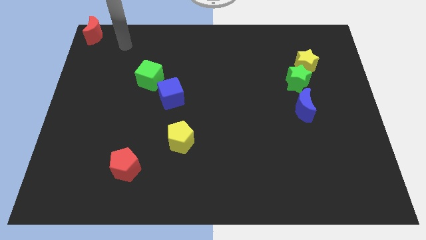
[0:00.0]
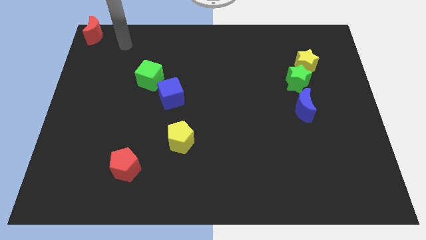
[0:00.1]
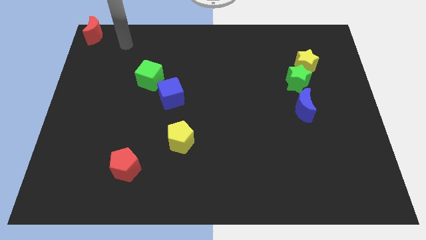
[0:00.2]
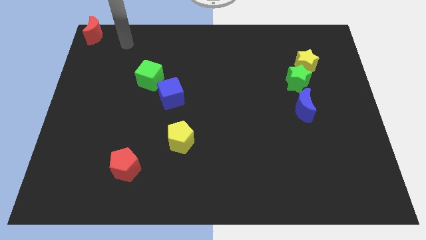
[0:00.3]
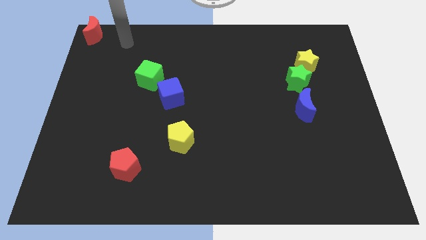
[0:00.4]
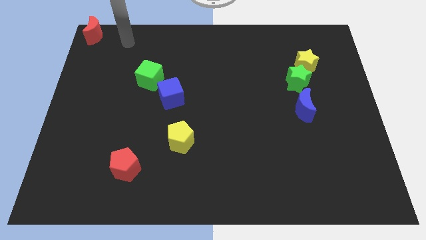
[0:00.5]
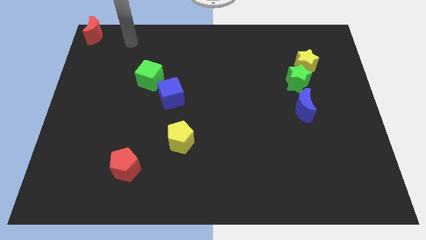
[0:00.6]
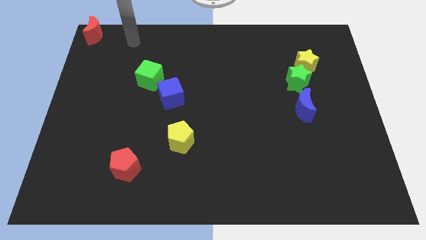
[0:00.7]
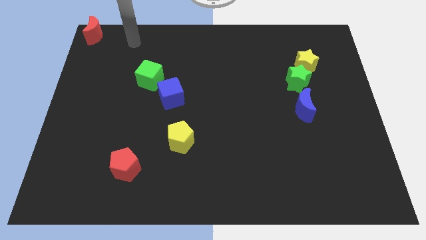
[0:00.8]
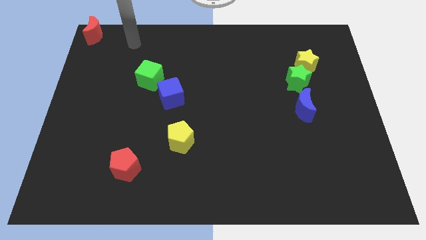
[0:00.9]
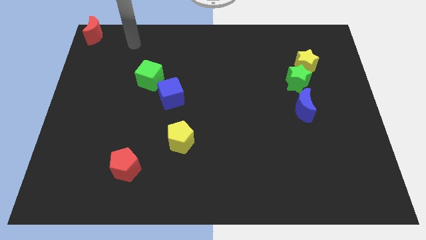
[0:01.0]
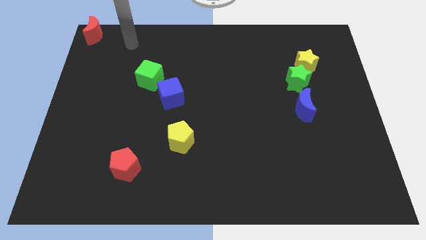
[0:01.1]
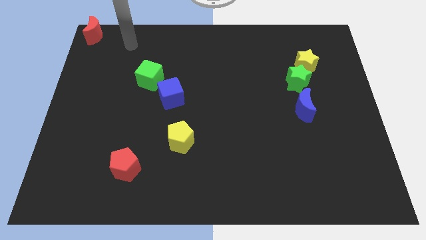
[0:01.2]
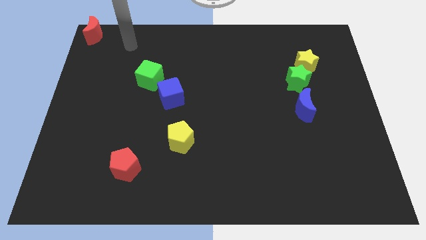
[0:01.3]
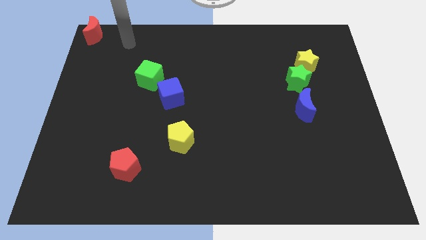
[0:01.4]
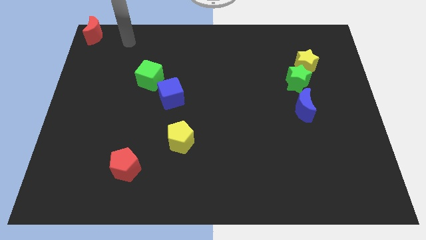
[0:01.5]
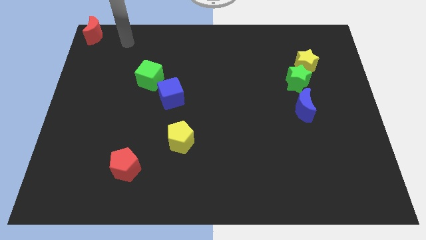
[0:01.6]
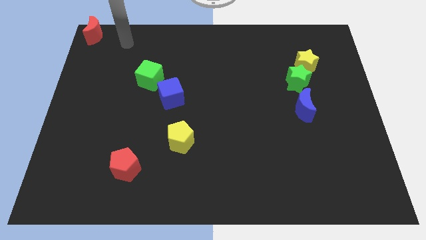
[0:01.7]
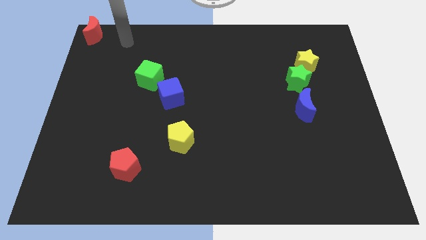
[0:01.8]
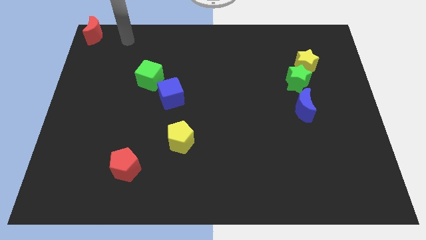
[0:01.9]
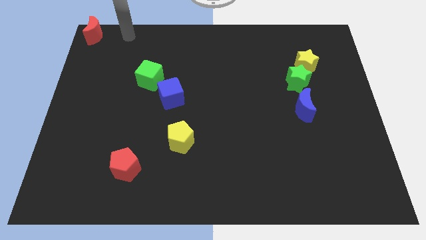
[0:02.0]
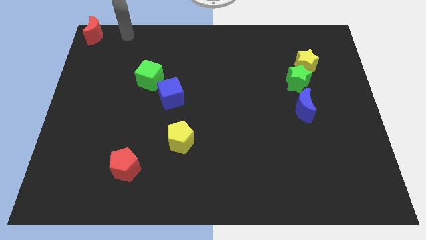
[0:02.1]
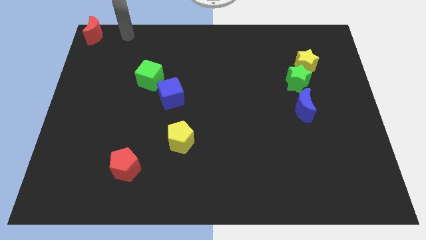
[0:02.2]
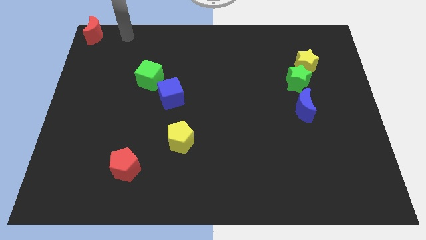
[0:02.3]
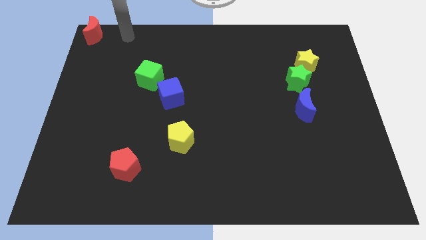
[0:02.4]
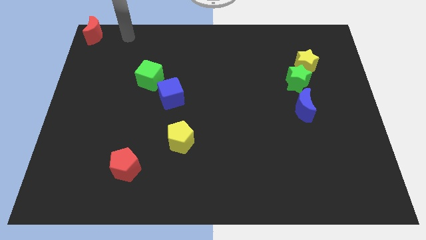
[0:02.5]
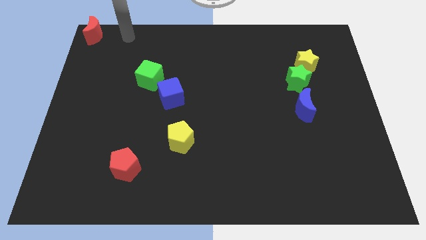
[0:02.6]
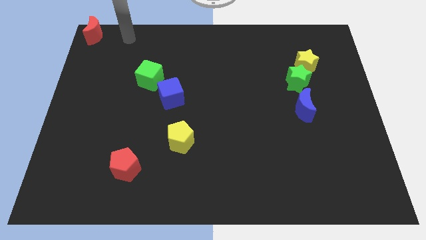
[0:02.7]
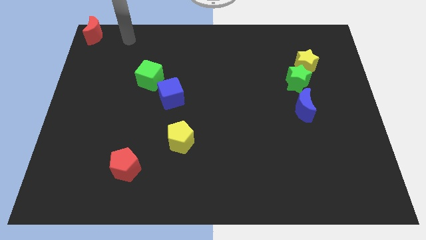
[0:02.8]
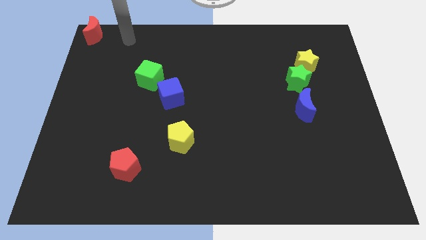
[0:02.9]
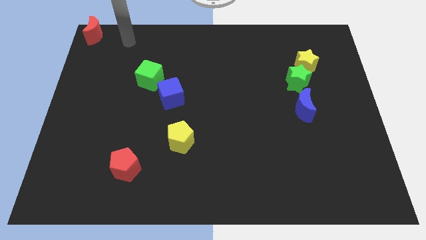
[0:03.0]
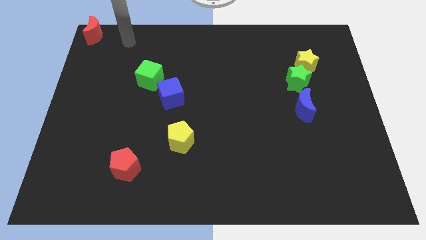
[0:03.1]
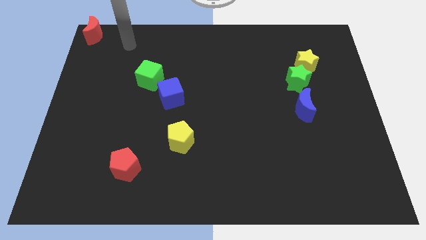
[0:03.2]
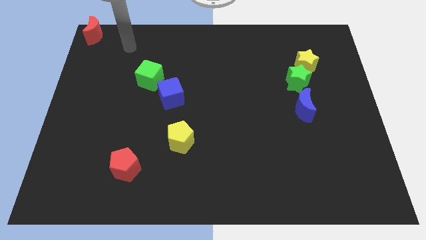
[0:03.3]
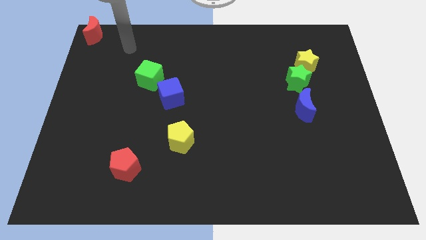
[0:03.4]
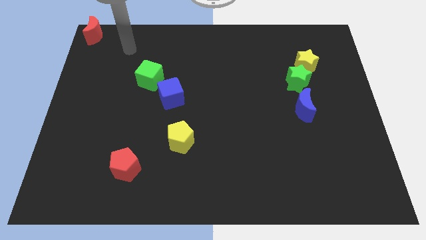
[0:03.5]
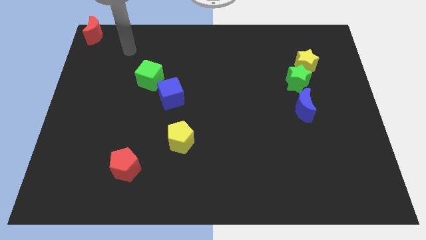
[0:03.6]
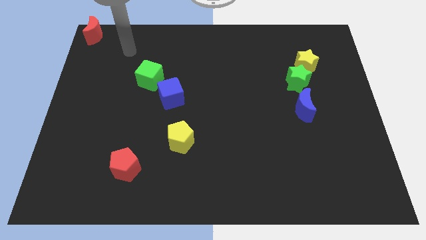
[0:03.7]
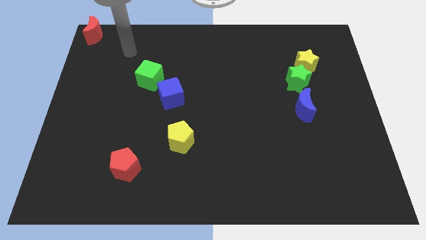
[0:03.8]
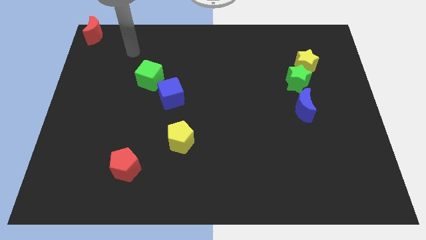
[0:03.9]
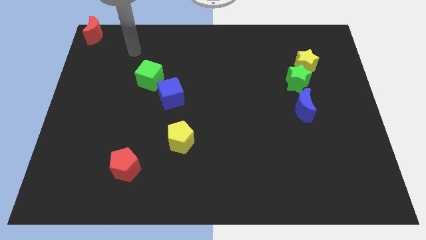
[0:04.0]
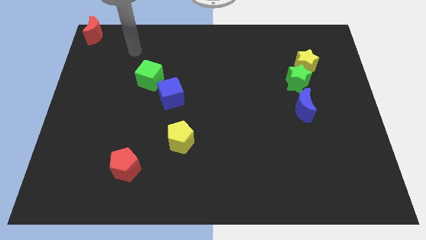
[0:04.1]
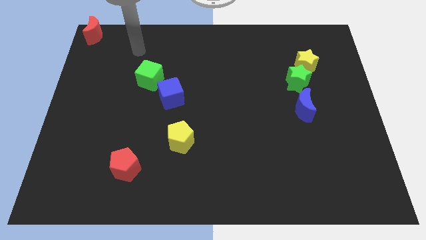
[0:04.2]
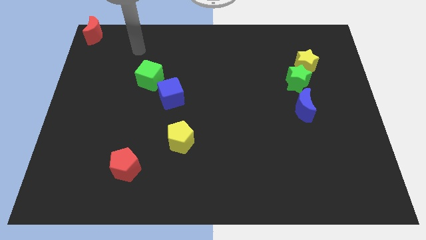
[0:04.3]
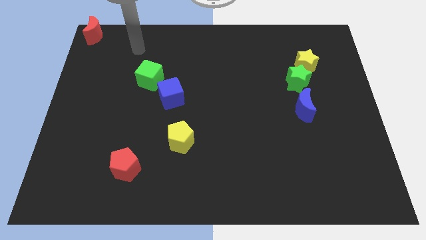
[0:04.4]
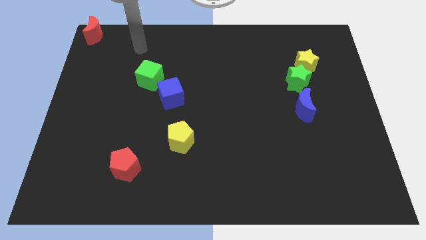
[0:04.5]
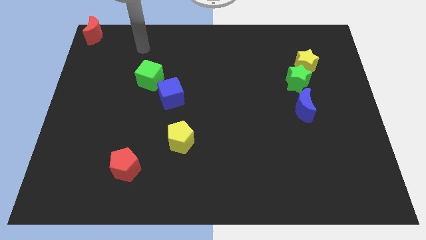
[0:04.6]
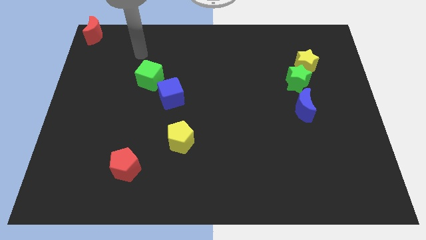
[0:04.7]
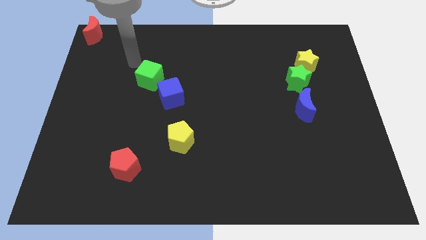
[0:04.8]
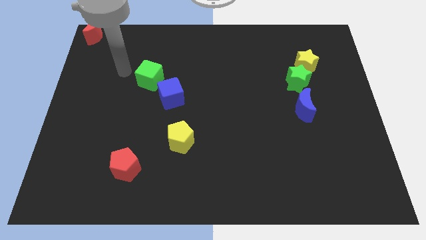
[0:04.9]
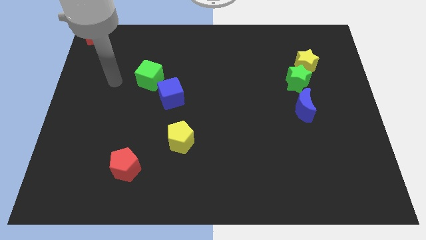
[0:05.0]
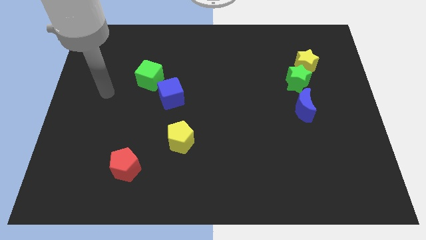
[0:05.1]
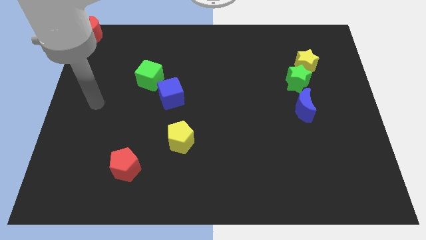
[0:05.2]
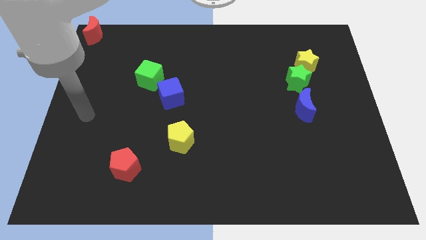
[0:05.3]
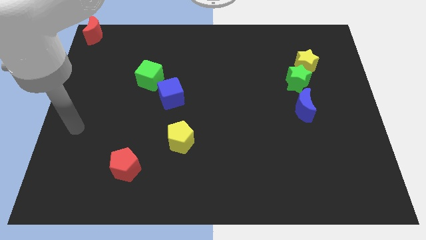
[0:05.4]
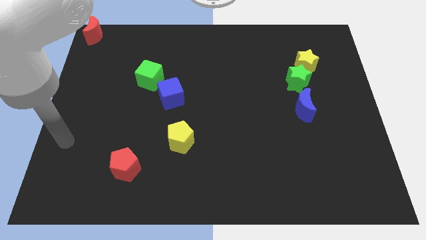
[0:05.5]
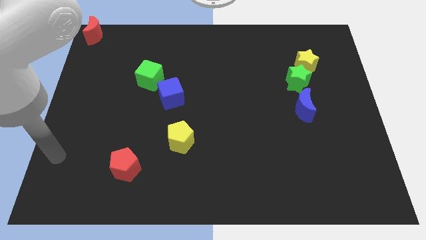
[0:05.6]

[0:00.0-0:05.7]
move your arm towards the bottom of the board

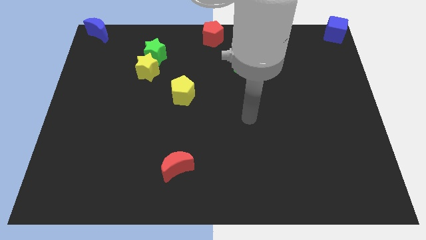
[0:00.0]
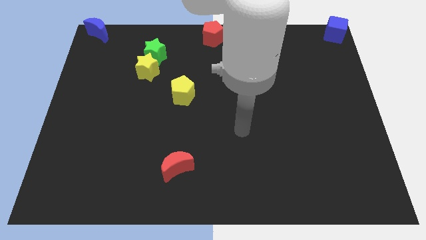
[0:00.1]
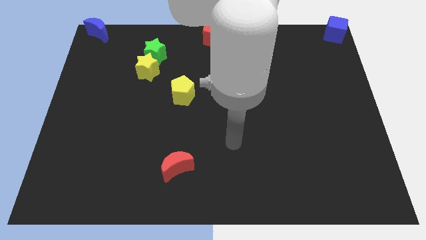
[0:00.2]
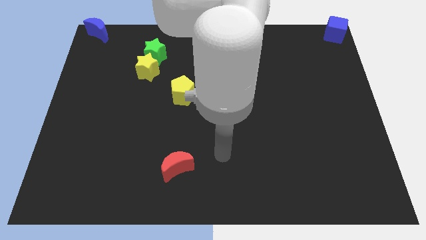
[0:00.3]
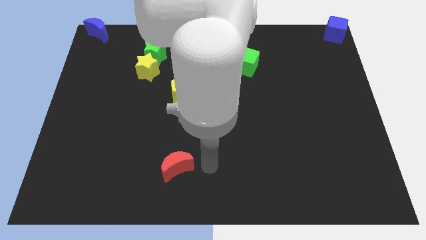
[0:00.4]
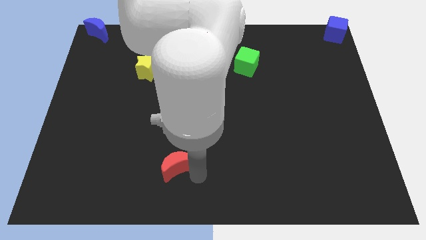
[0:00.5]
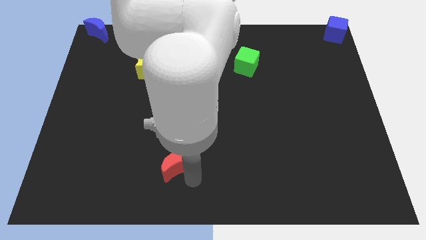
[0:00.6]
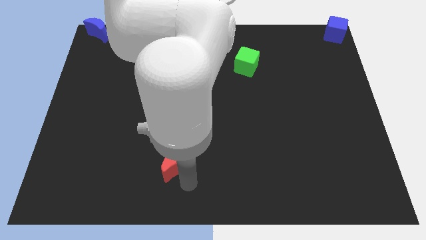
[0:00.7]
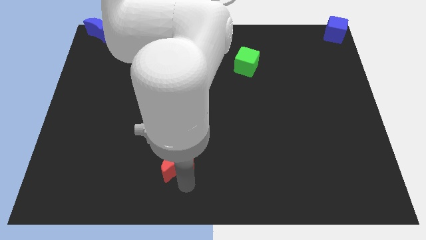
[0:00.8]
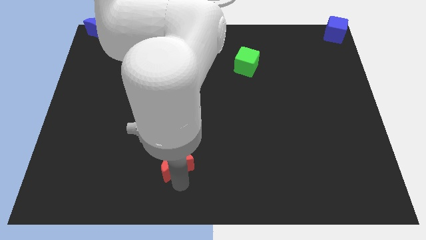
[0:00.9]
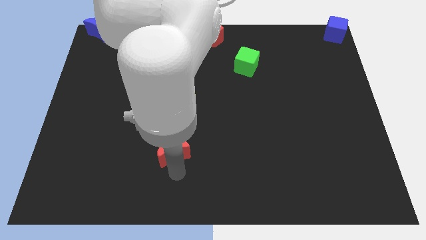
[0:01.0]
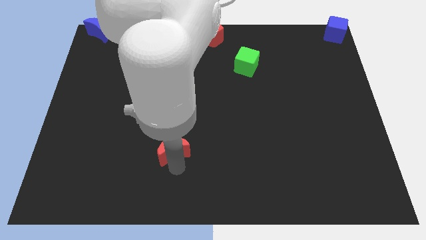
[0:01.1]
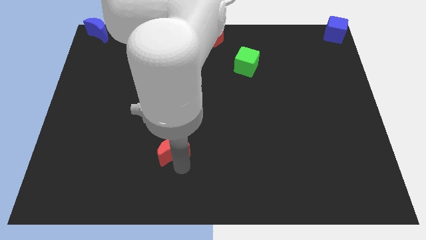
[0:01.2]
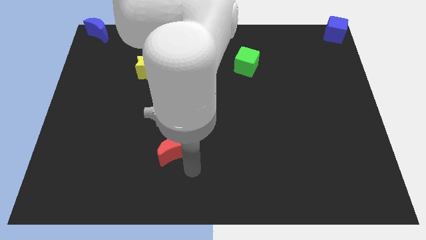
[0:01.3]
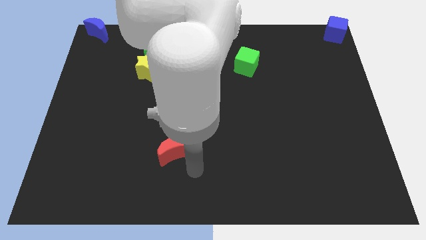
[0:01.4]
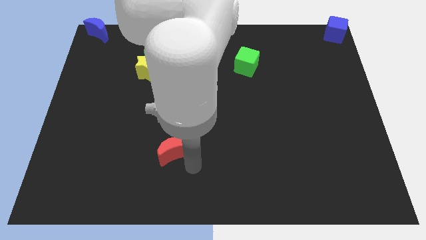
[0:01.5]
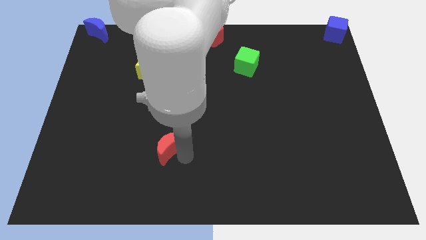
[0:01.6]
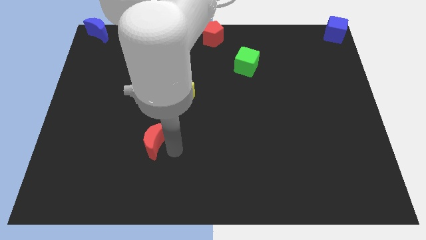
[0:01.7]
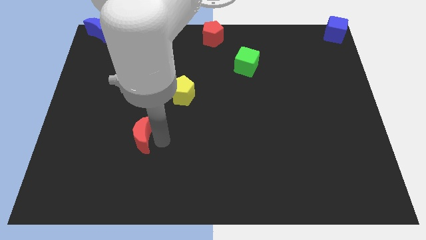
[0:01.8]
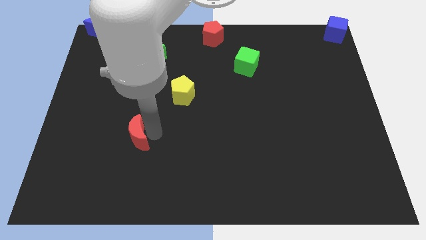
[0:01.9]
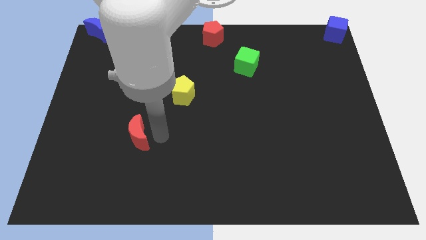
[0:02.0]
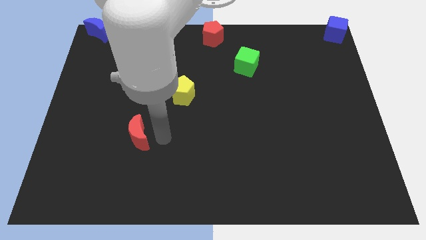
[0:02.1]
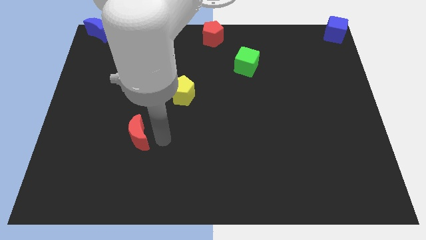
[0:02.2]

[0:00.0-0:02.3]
place the red moon diagonally bottom left to the yellow pentagon

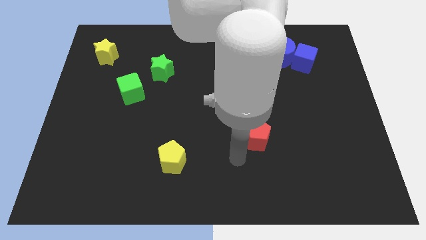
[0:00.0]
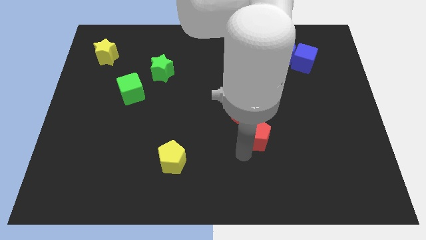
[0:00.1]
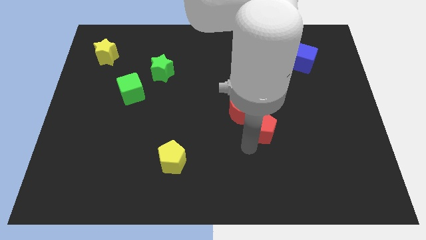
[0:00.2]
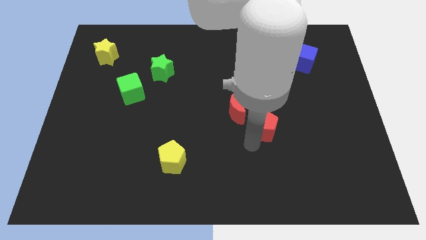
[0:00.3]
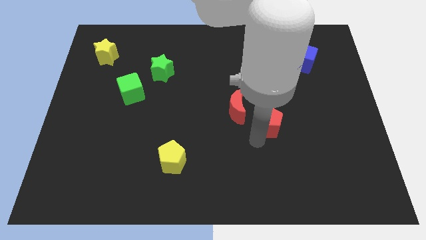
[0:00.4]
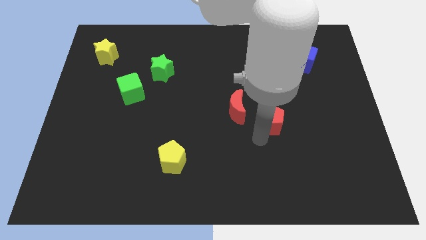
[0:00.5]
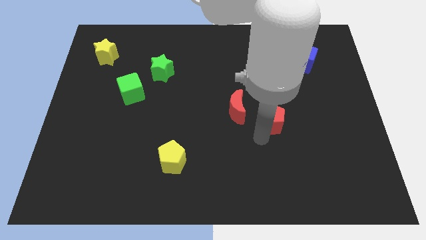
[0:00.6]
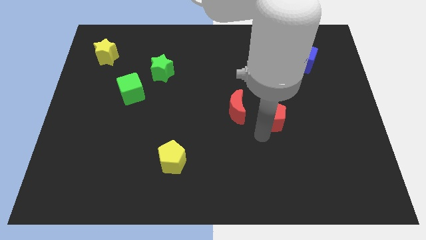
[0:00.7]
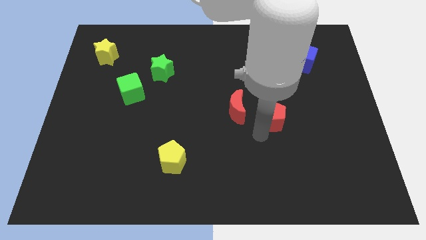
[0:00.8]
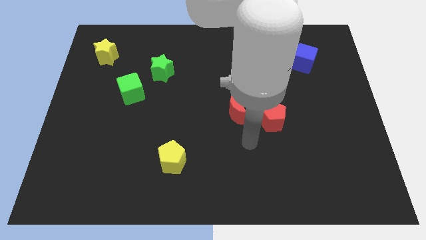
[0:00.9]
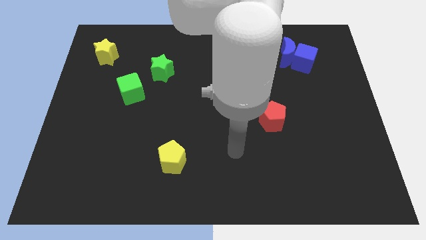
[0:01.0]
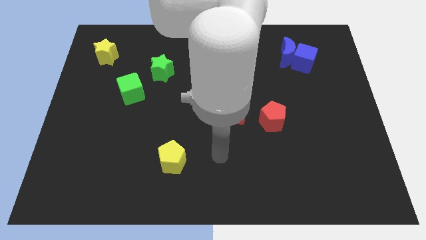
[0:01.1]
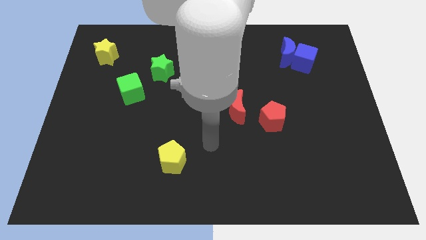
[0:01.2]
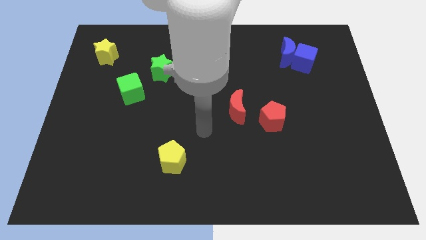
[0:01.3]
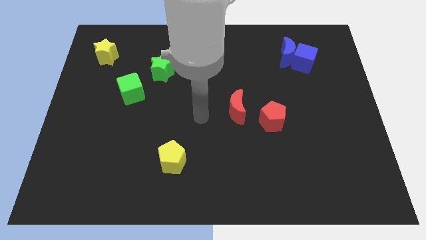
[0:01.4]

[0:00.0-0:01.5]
move the red pentagon right beside the red crescent
